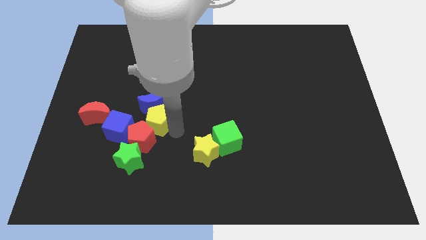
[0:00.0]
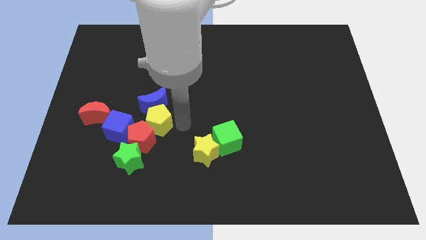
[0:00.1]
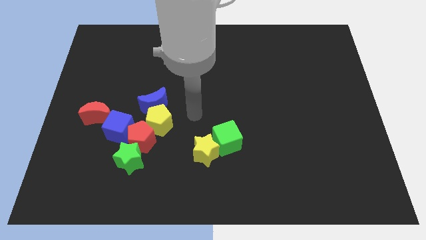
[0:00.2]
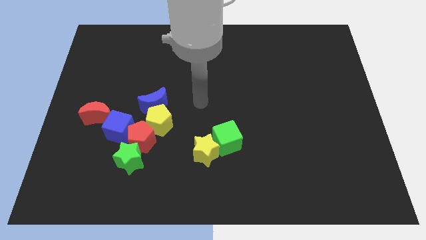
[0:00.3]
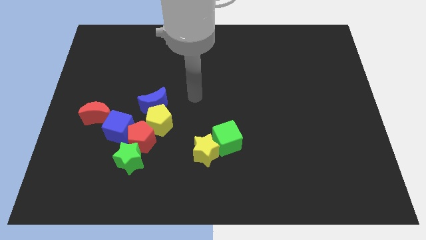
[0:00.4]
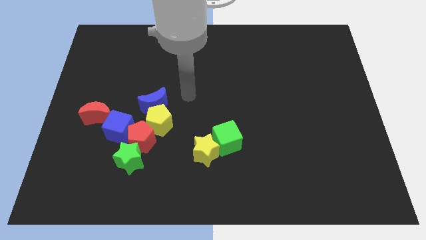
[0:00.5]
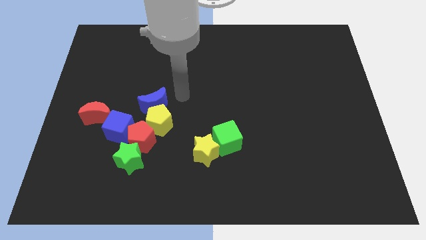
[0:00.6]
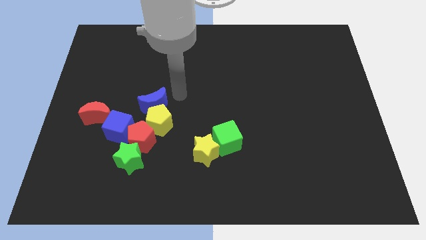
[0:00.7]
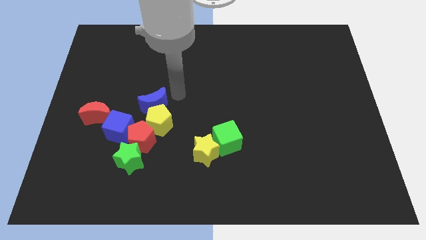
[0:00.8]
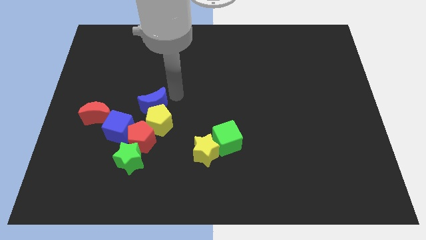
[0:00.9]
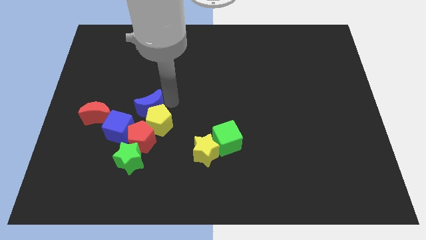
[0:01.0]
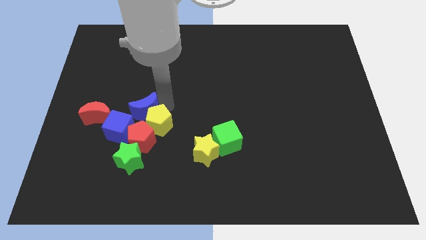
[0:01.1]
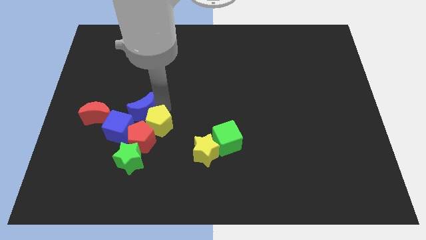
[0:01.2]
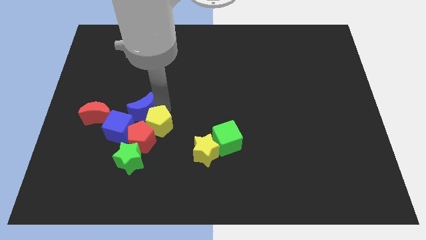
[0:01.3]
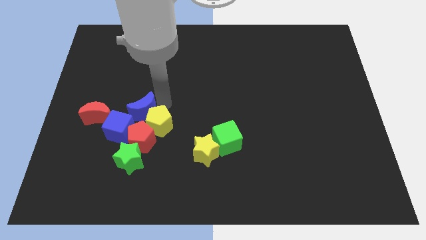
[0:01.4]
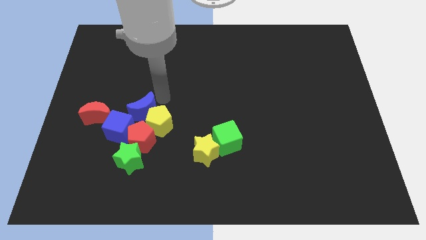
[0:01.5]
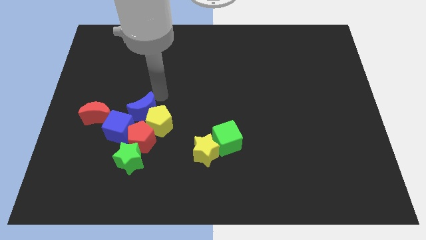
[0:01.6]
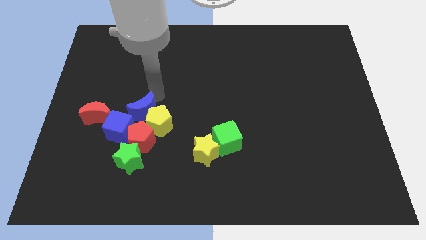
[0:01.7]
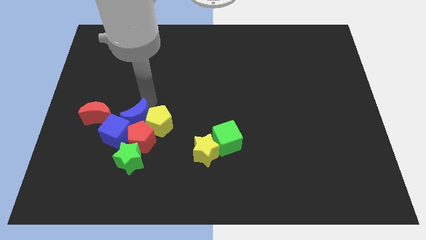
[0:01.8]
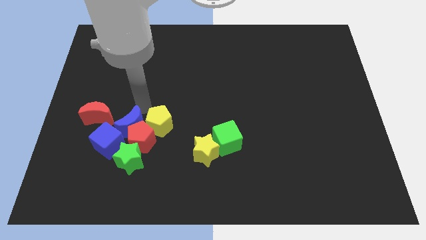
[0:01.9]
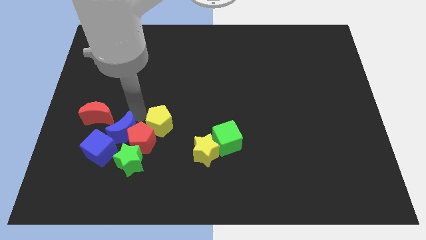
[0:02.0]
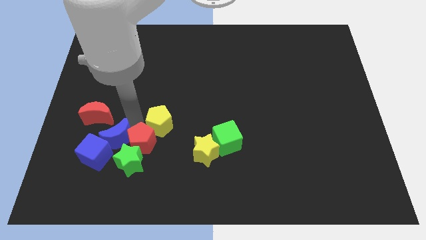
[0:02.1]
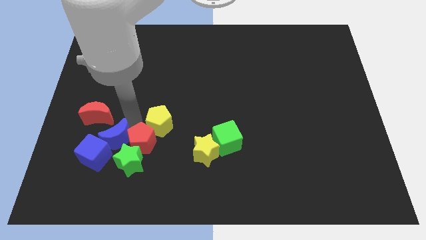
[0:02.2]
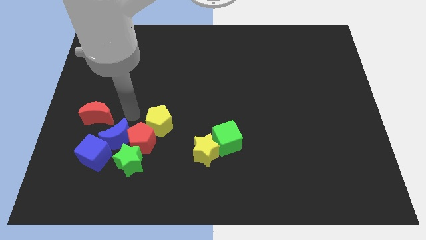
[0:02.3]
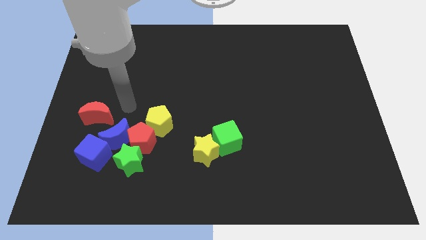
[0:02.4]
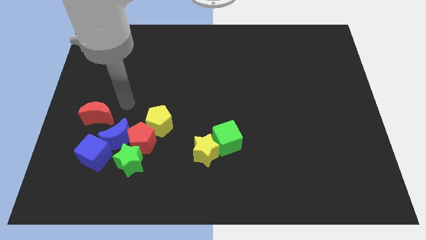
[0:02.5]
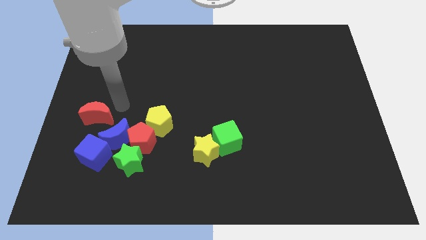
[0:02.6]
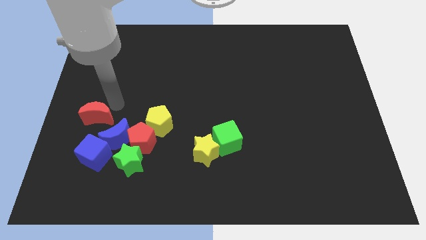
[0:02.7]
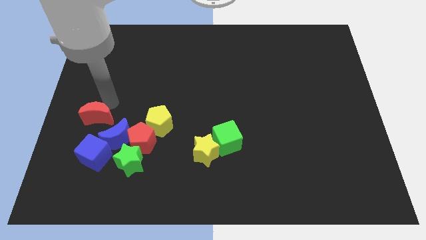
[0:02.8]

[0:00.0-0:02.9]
push the blue cube with the blue moon

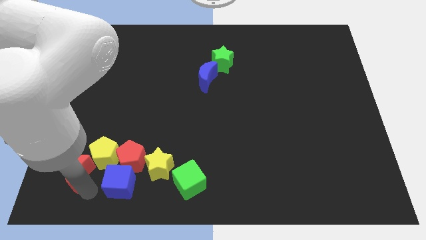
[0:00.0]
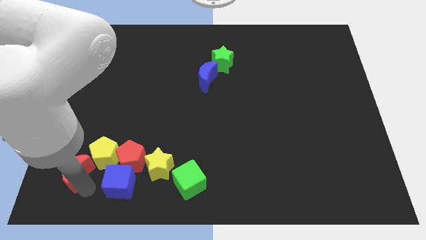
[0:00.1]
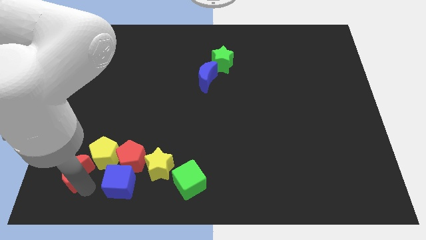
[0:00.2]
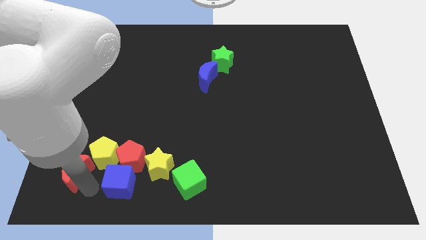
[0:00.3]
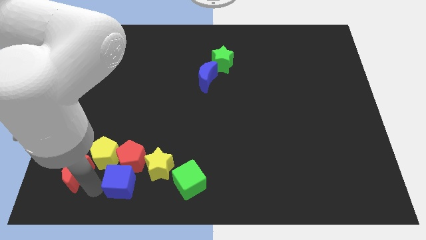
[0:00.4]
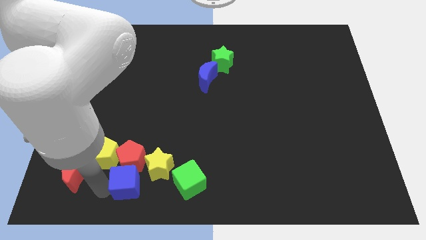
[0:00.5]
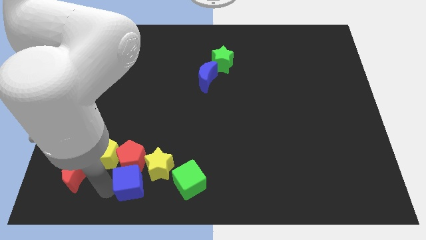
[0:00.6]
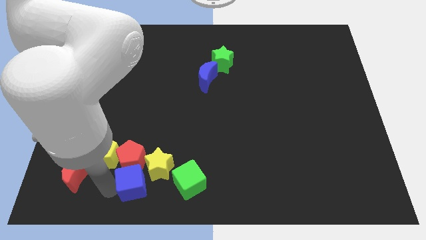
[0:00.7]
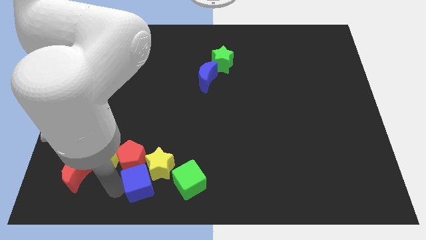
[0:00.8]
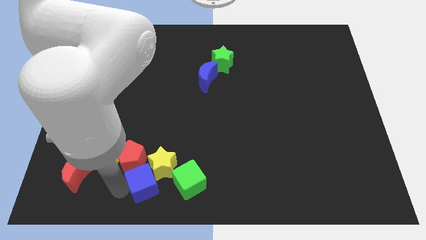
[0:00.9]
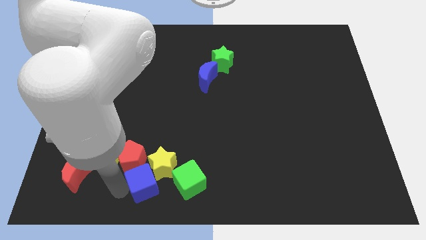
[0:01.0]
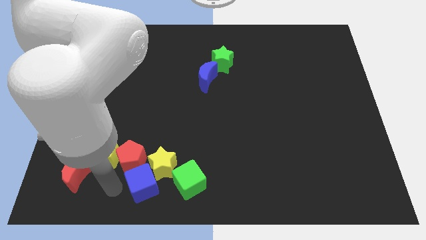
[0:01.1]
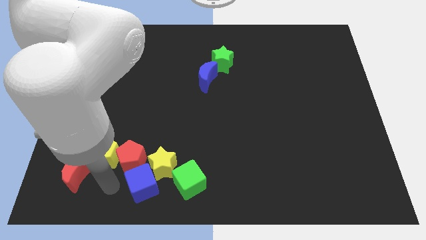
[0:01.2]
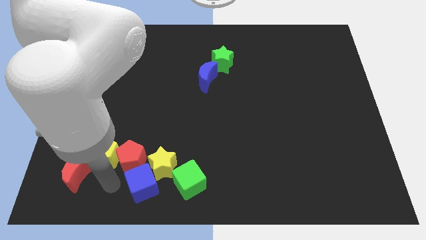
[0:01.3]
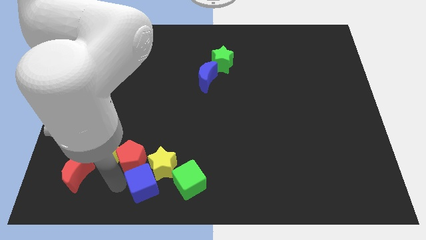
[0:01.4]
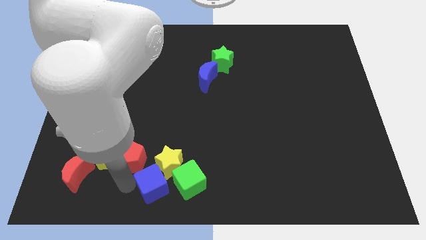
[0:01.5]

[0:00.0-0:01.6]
push the blue cube into yellow star

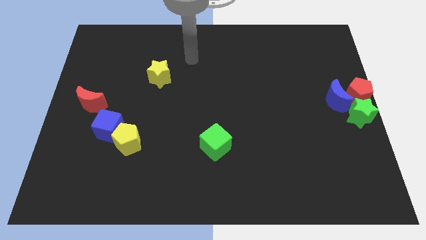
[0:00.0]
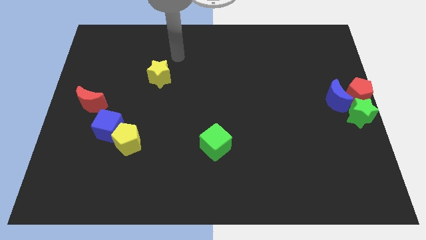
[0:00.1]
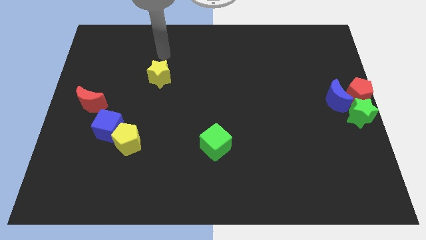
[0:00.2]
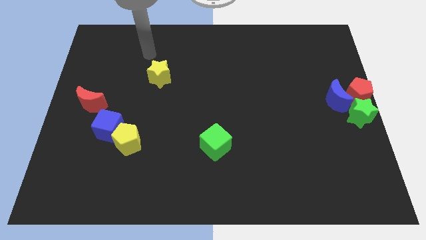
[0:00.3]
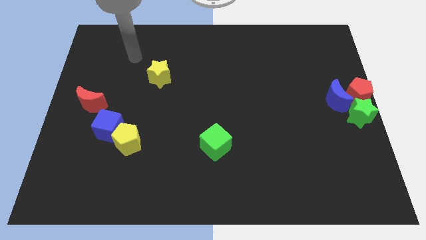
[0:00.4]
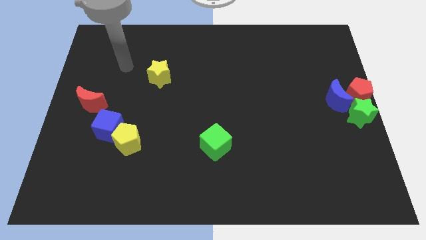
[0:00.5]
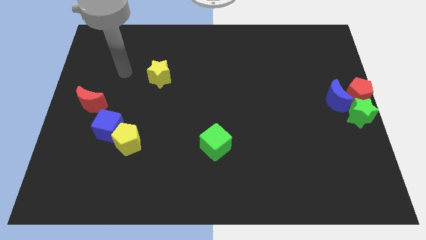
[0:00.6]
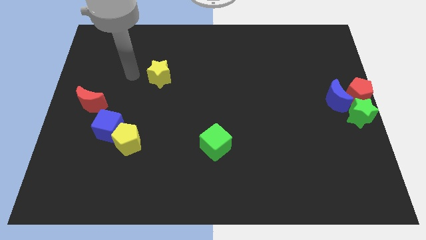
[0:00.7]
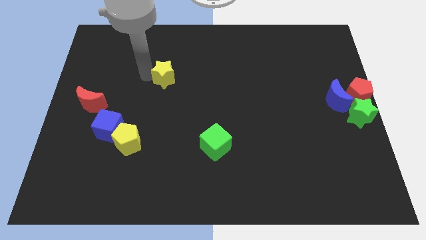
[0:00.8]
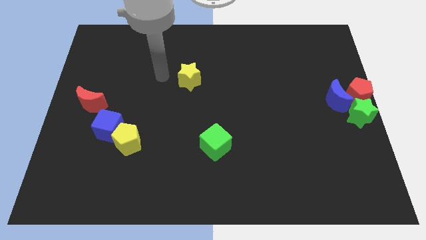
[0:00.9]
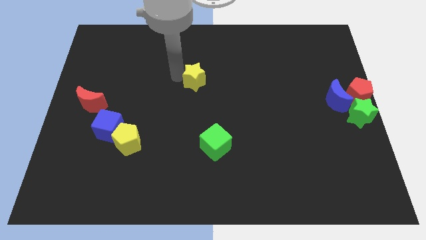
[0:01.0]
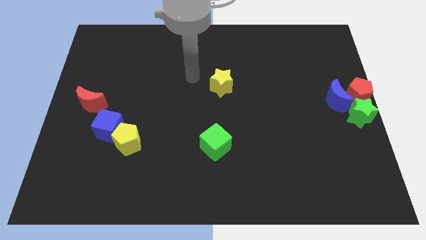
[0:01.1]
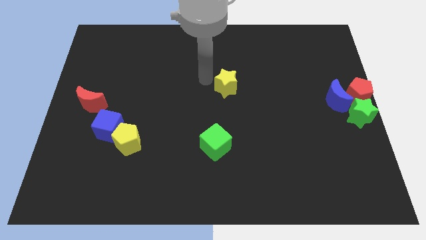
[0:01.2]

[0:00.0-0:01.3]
move the yellow star to the top of the green cube

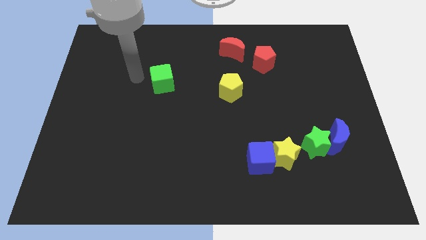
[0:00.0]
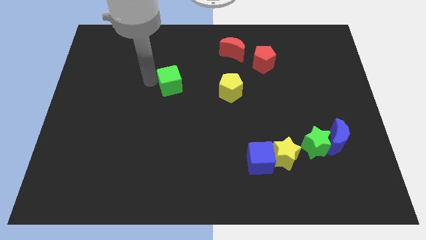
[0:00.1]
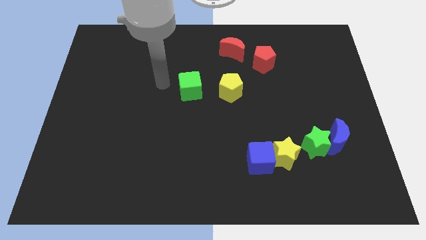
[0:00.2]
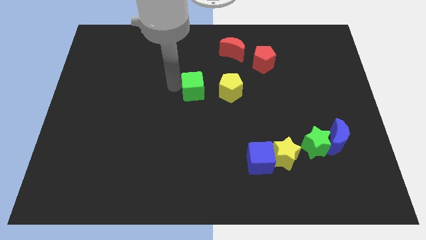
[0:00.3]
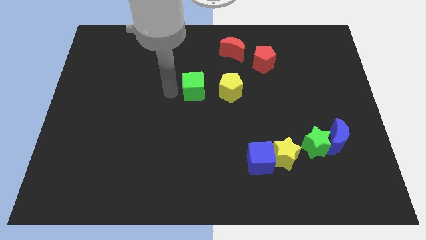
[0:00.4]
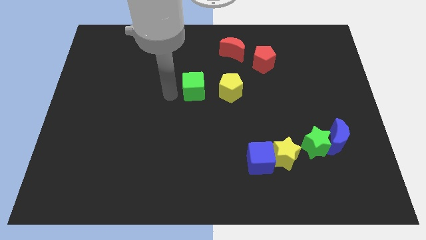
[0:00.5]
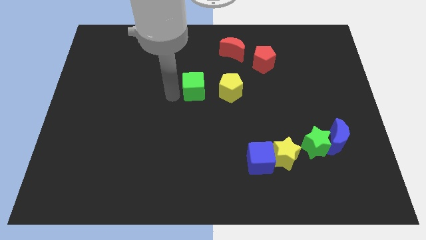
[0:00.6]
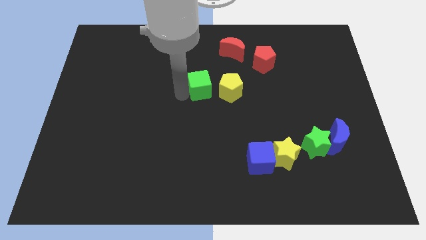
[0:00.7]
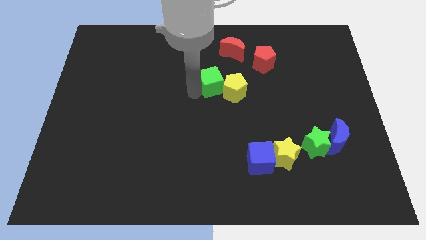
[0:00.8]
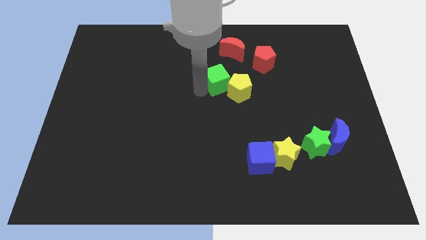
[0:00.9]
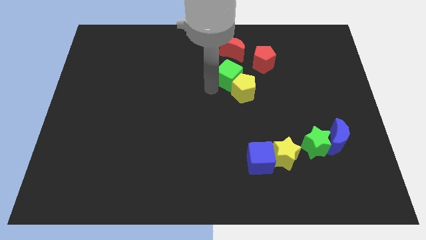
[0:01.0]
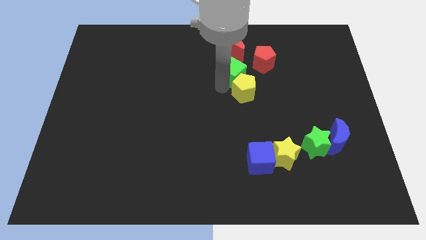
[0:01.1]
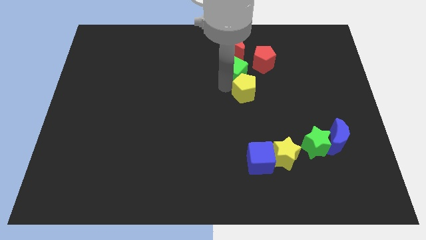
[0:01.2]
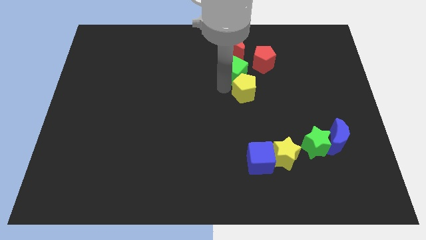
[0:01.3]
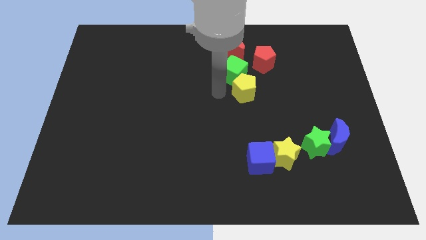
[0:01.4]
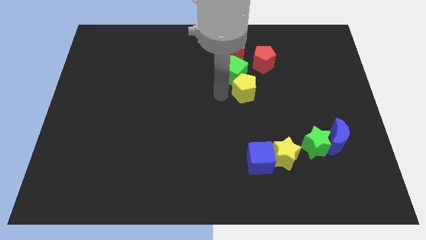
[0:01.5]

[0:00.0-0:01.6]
move the green cube to the bottom of the red crescent

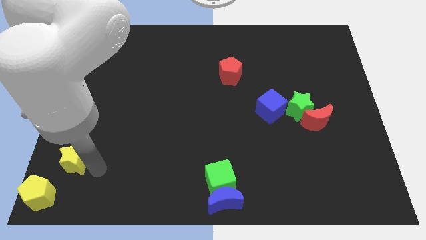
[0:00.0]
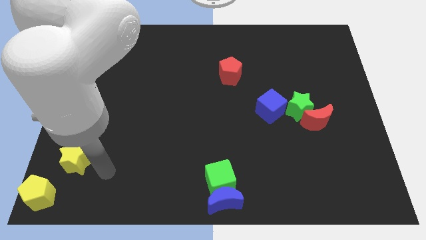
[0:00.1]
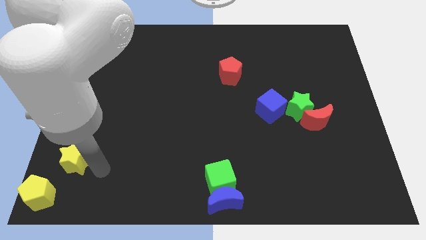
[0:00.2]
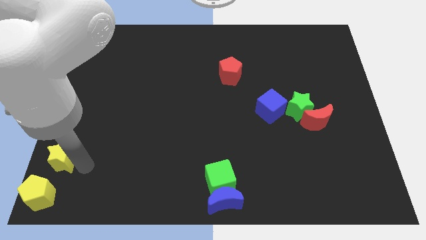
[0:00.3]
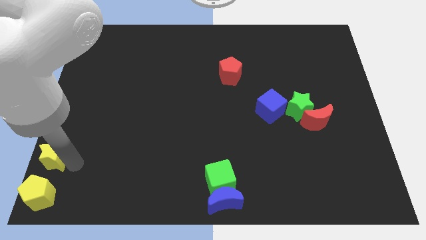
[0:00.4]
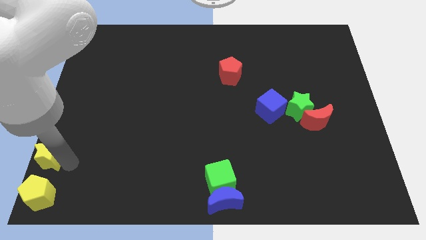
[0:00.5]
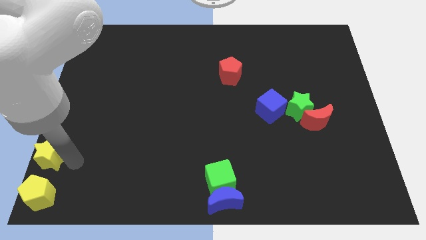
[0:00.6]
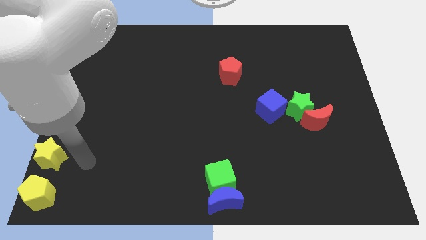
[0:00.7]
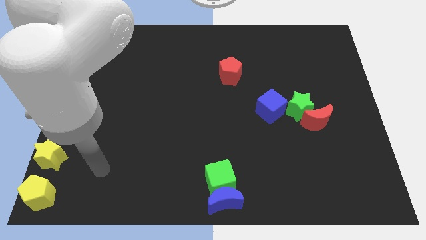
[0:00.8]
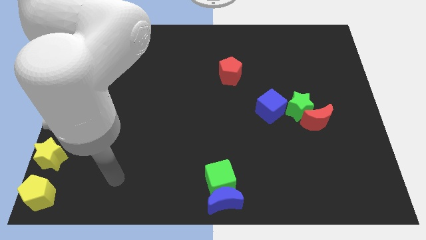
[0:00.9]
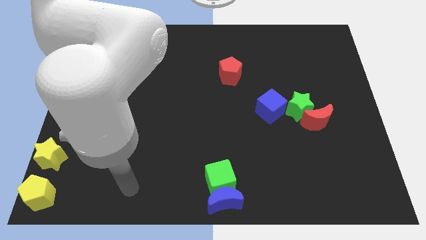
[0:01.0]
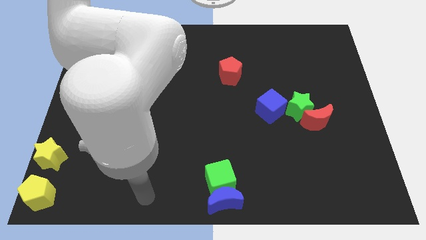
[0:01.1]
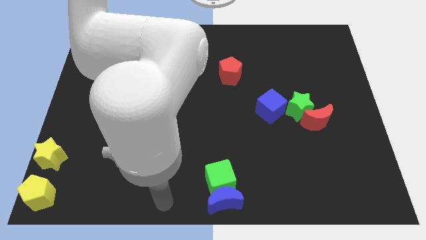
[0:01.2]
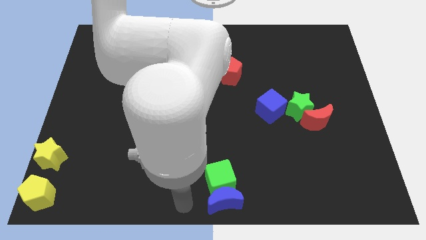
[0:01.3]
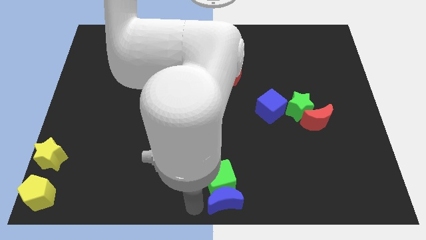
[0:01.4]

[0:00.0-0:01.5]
place the yellow star above the yellow pentagon

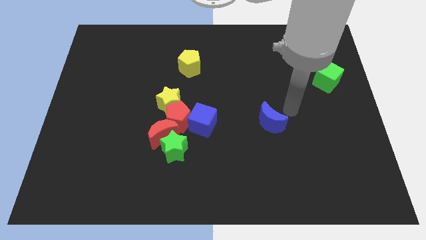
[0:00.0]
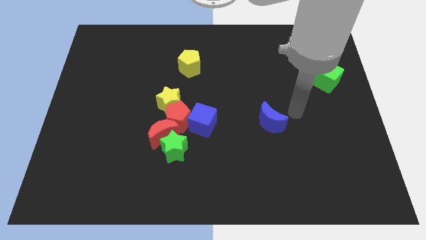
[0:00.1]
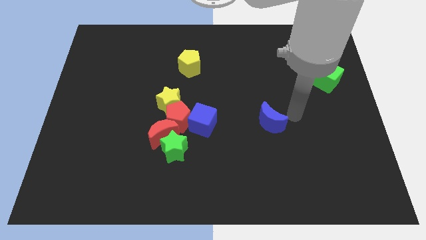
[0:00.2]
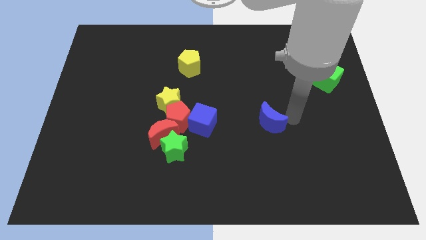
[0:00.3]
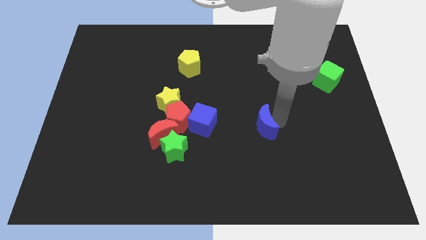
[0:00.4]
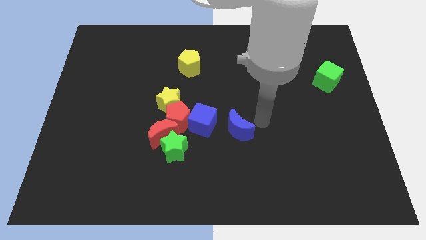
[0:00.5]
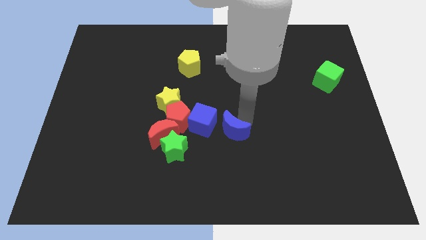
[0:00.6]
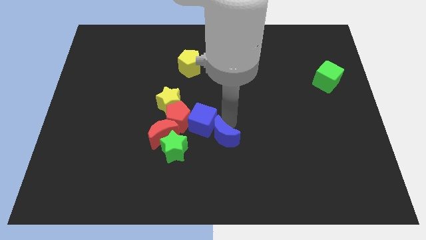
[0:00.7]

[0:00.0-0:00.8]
push blue moon in to blue cube
